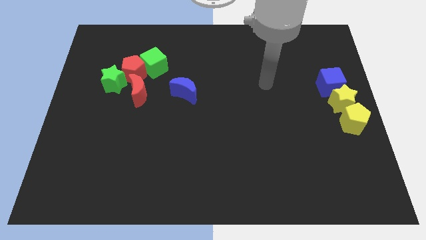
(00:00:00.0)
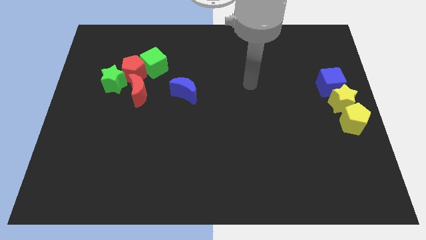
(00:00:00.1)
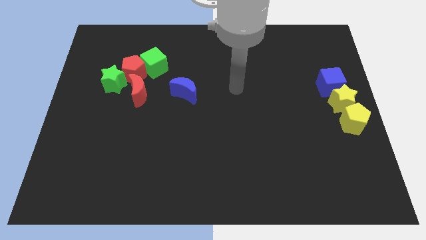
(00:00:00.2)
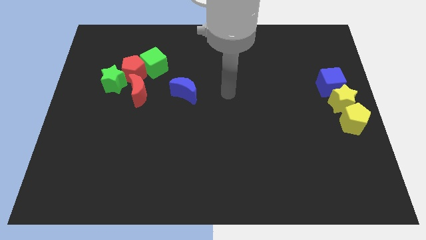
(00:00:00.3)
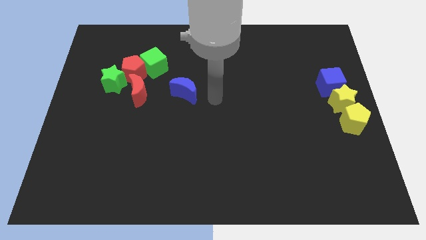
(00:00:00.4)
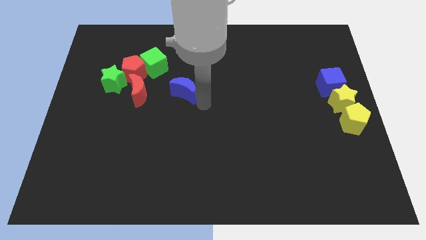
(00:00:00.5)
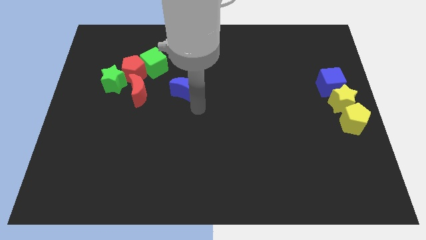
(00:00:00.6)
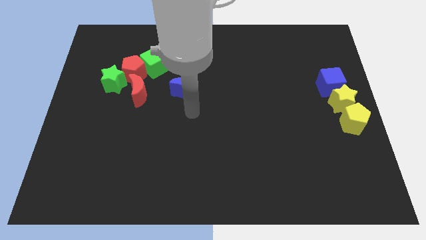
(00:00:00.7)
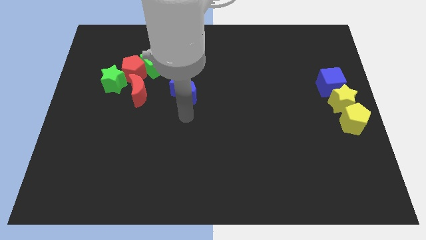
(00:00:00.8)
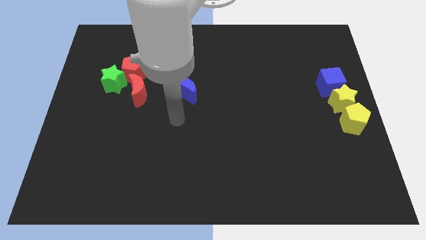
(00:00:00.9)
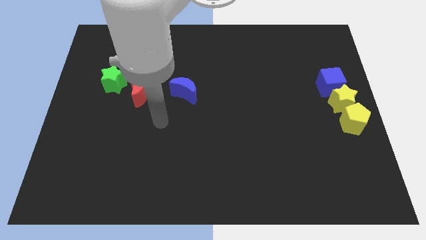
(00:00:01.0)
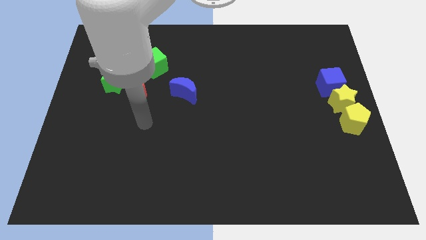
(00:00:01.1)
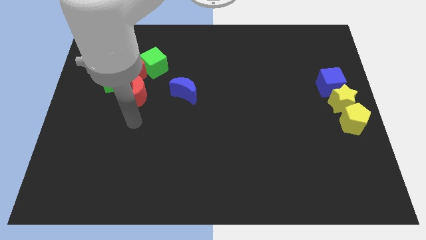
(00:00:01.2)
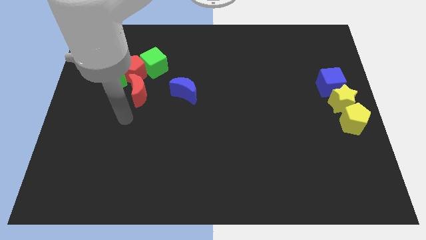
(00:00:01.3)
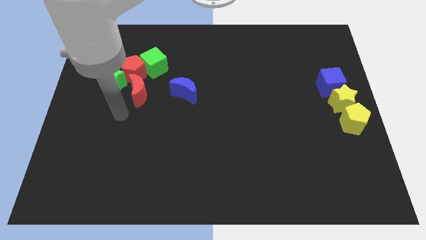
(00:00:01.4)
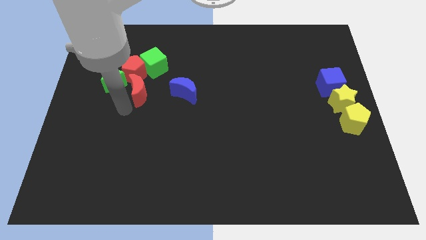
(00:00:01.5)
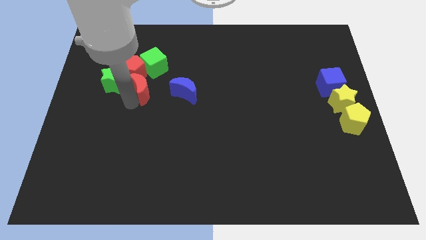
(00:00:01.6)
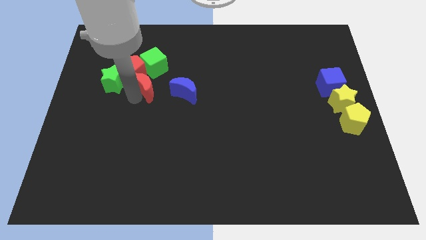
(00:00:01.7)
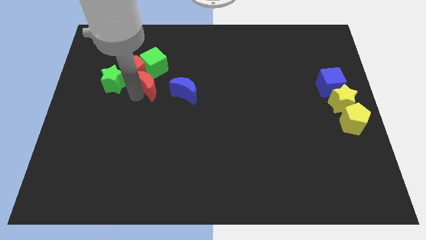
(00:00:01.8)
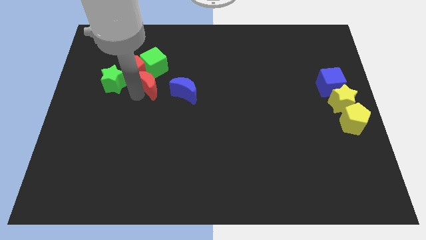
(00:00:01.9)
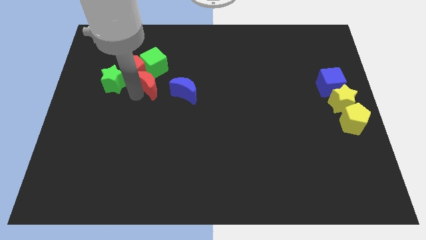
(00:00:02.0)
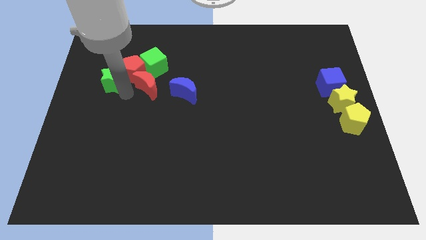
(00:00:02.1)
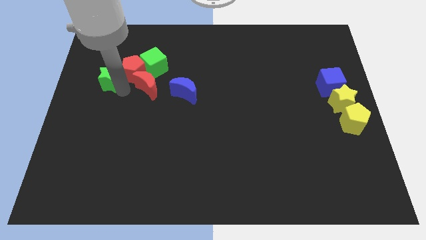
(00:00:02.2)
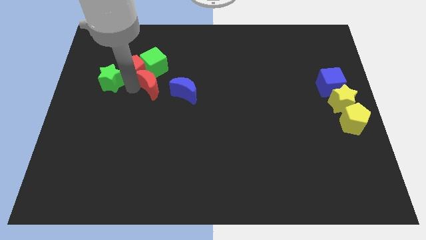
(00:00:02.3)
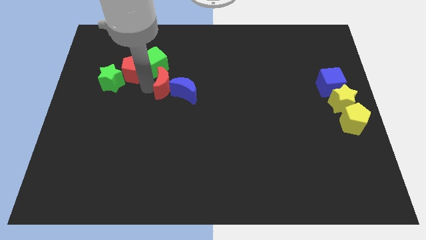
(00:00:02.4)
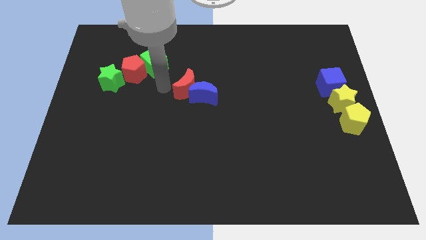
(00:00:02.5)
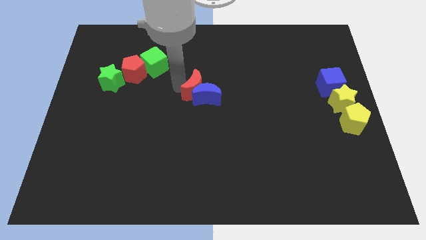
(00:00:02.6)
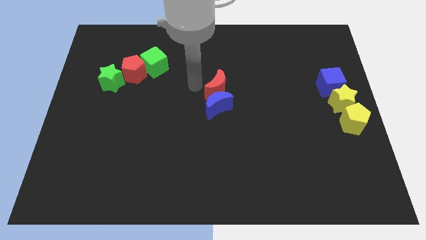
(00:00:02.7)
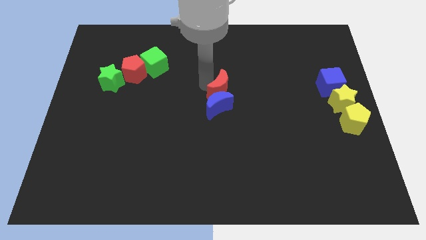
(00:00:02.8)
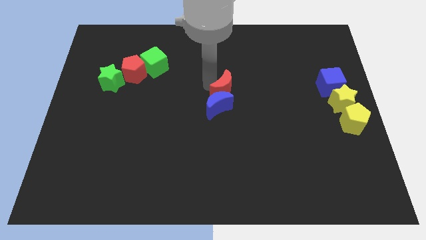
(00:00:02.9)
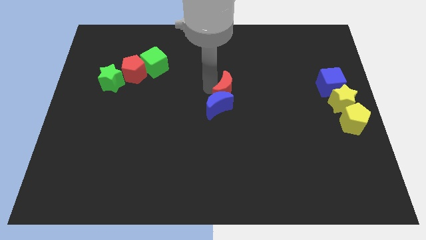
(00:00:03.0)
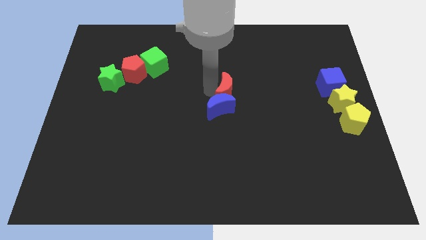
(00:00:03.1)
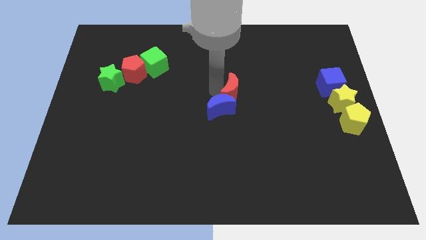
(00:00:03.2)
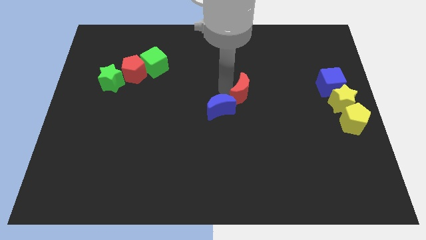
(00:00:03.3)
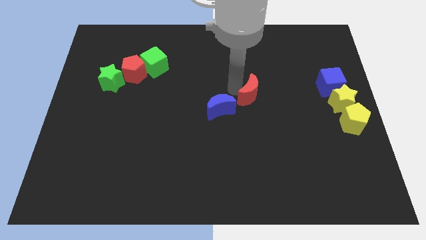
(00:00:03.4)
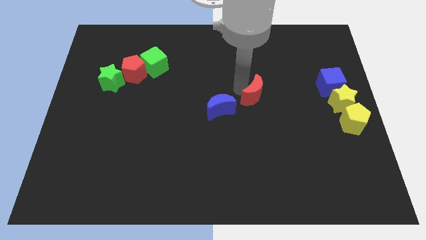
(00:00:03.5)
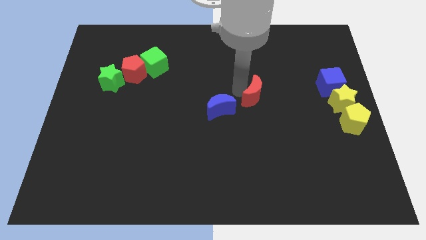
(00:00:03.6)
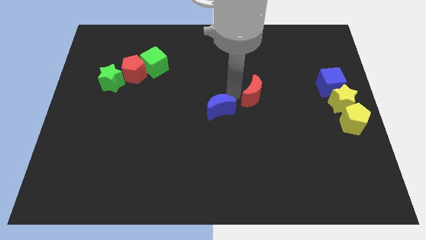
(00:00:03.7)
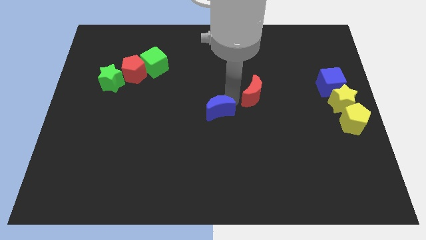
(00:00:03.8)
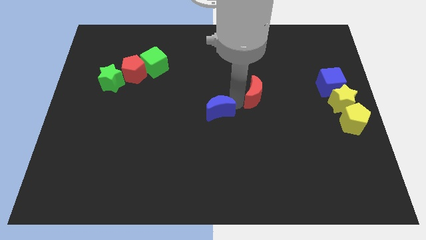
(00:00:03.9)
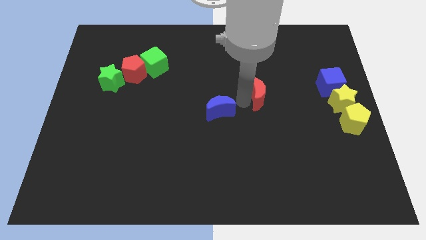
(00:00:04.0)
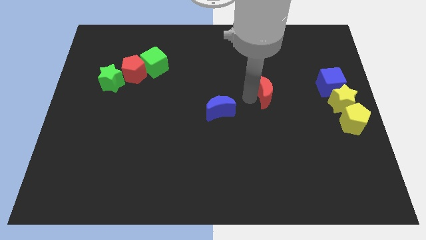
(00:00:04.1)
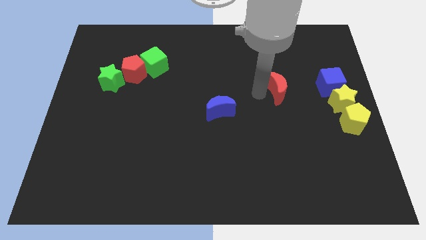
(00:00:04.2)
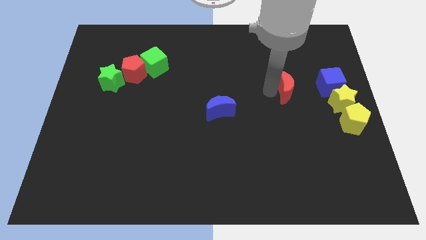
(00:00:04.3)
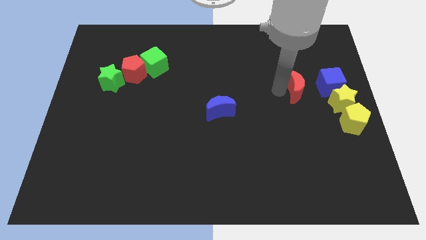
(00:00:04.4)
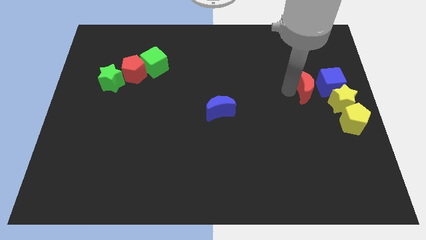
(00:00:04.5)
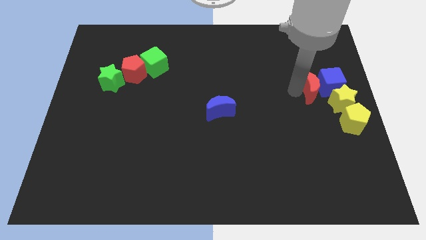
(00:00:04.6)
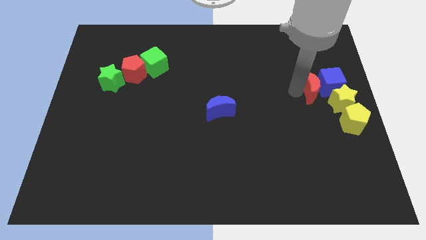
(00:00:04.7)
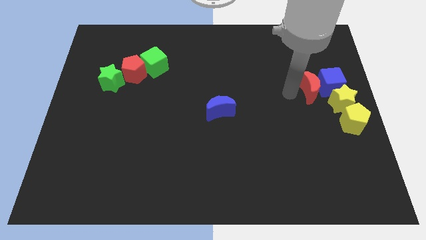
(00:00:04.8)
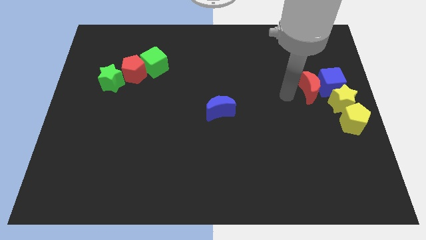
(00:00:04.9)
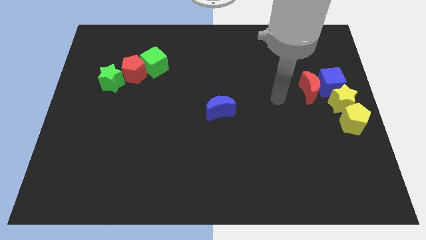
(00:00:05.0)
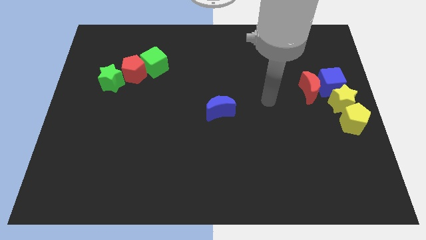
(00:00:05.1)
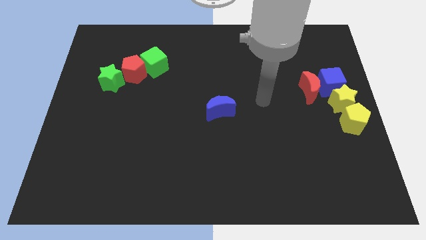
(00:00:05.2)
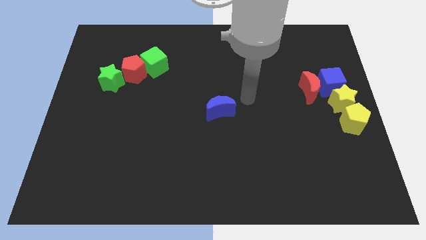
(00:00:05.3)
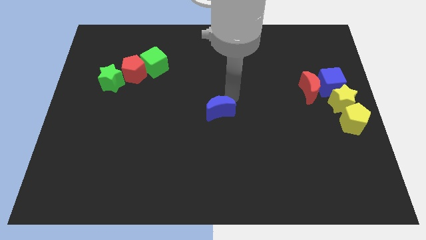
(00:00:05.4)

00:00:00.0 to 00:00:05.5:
move the red crescent towards the blue cube

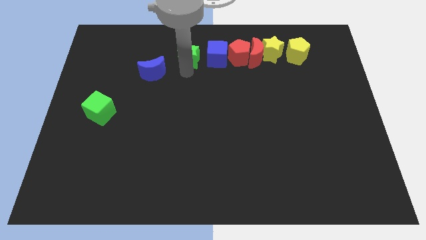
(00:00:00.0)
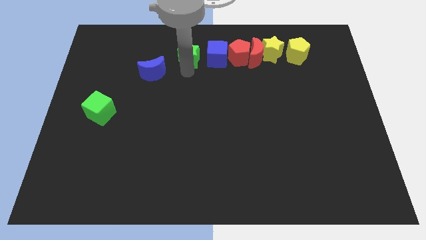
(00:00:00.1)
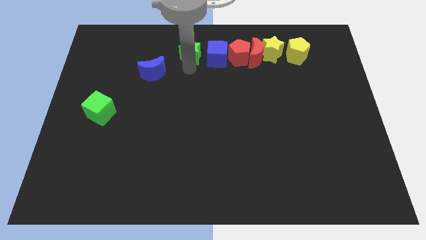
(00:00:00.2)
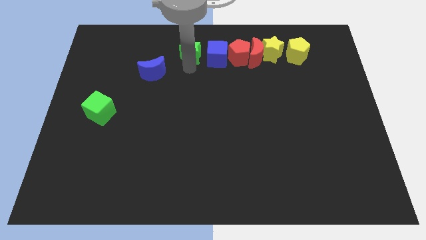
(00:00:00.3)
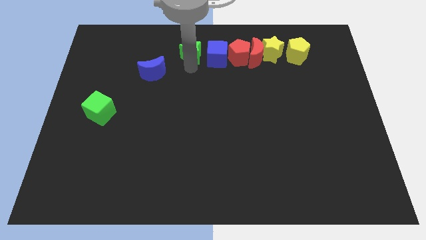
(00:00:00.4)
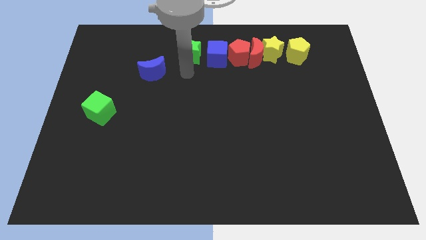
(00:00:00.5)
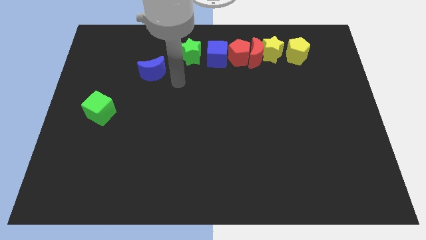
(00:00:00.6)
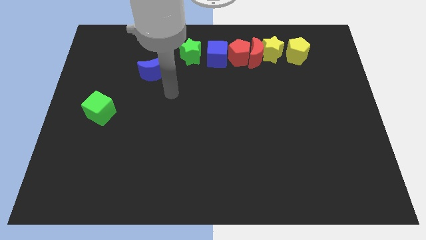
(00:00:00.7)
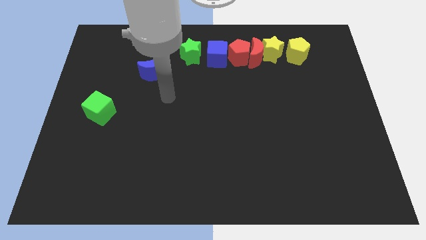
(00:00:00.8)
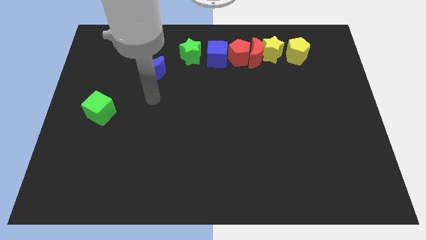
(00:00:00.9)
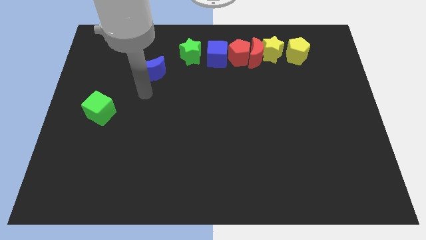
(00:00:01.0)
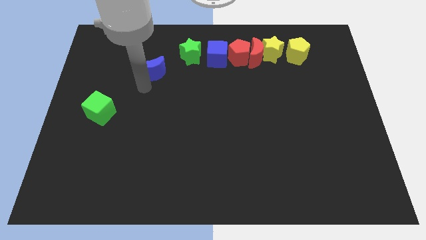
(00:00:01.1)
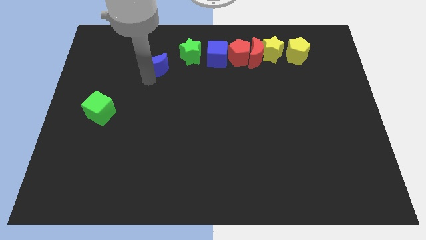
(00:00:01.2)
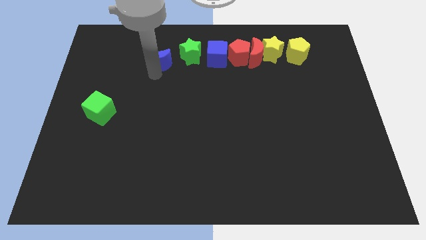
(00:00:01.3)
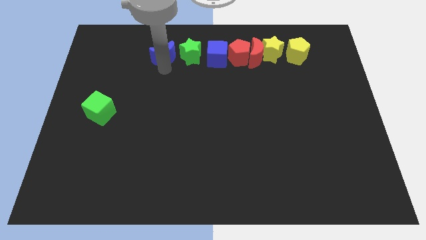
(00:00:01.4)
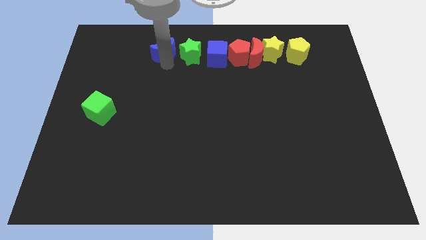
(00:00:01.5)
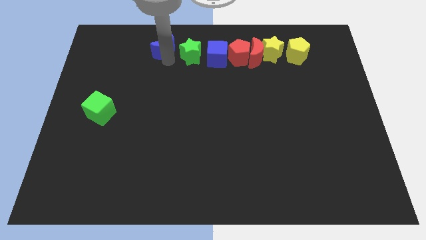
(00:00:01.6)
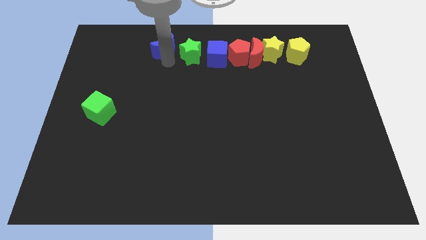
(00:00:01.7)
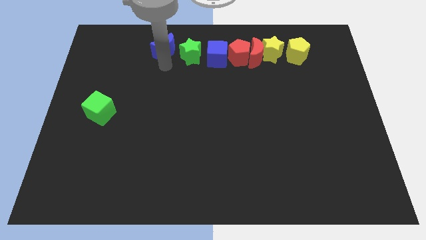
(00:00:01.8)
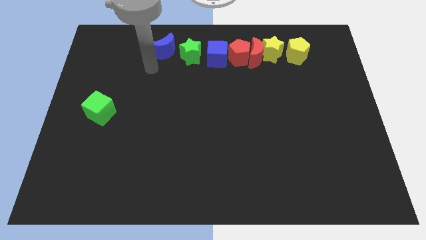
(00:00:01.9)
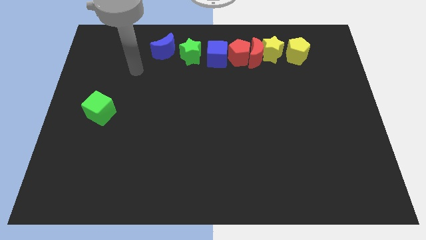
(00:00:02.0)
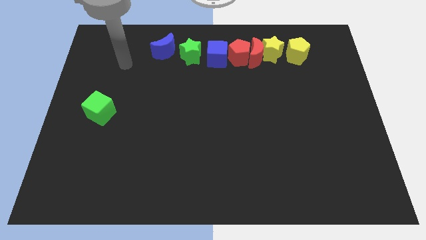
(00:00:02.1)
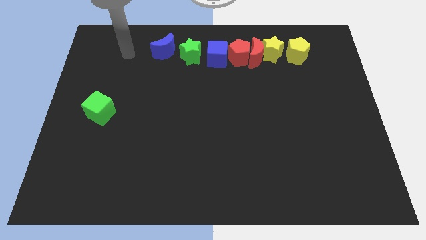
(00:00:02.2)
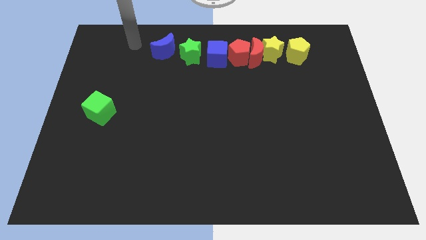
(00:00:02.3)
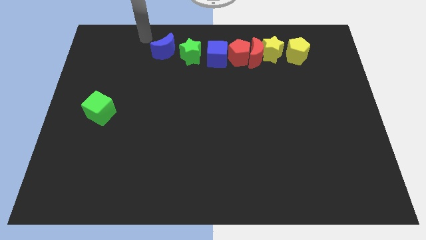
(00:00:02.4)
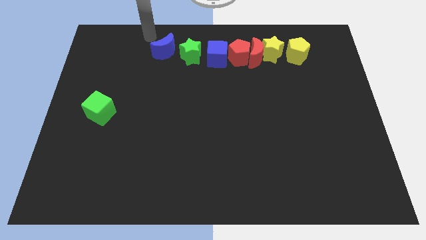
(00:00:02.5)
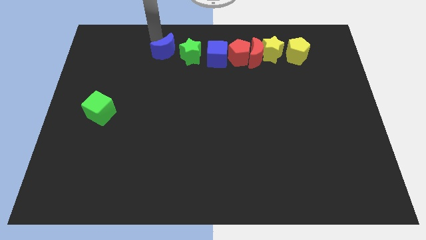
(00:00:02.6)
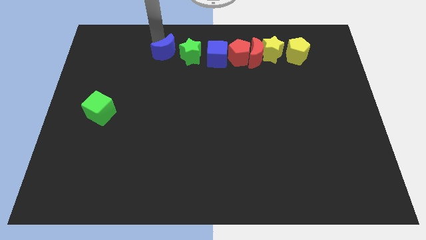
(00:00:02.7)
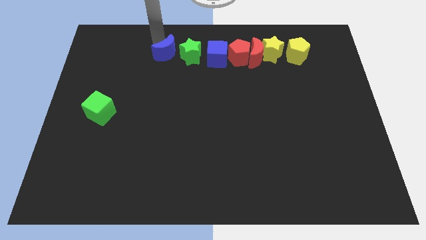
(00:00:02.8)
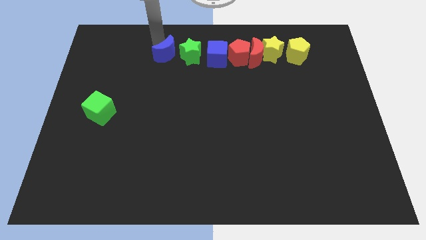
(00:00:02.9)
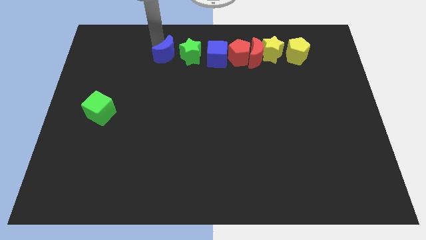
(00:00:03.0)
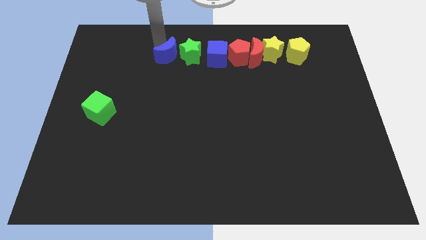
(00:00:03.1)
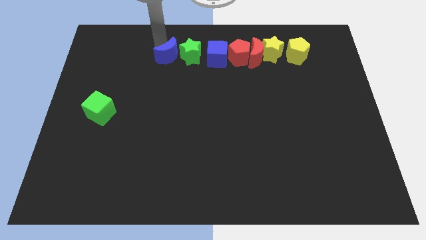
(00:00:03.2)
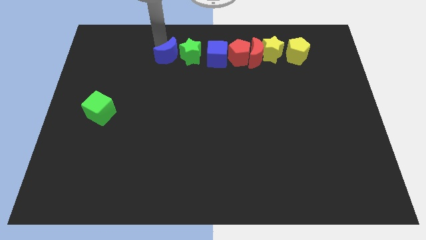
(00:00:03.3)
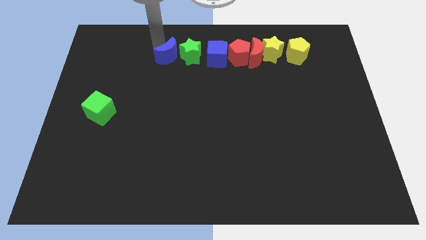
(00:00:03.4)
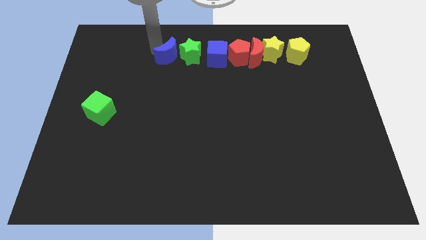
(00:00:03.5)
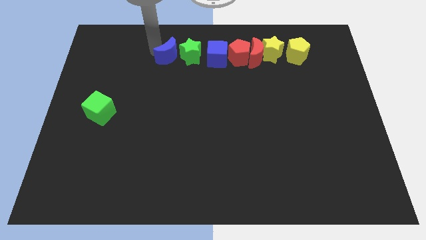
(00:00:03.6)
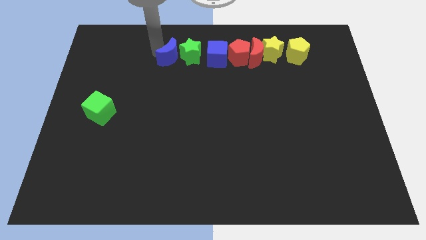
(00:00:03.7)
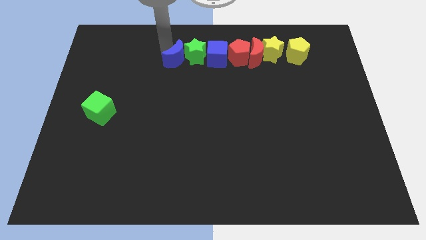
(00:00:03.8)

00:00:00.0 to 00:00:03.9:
place the green star and blue crescent in a horizontal line
